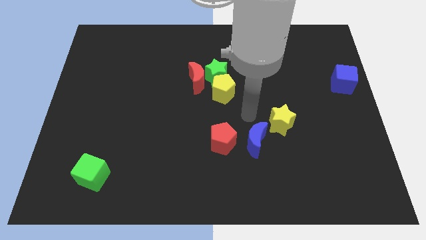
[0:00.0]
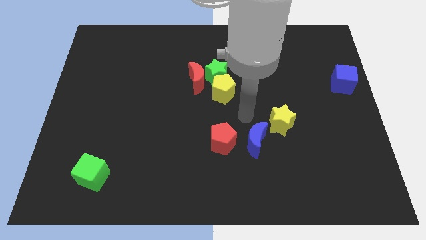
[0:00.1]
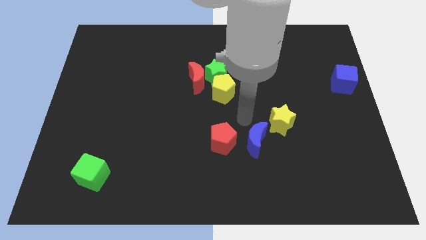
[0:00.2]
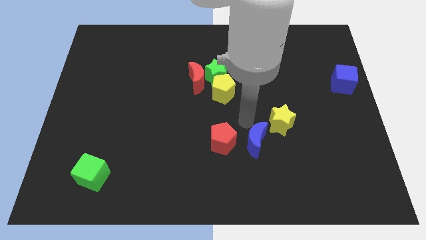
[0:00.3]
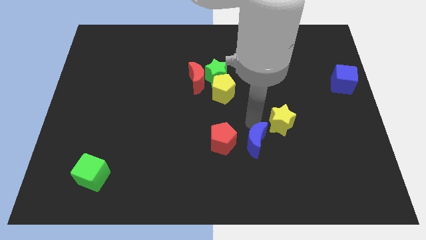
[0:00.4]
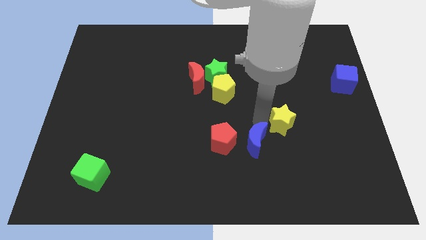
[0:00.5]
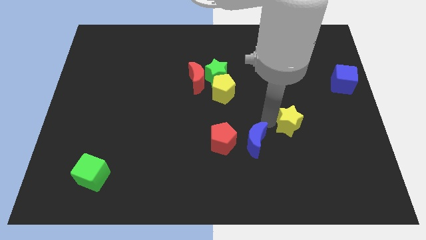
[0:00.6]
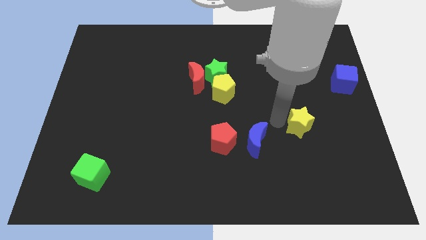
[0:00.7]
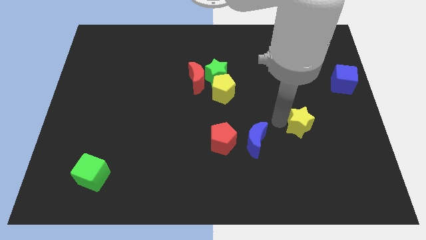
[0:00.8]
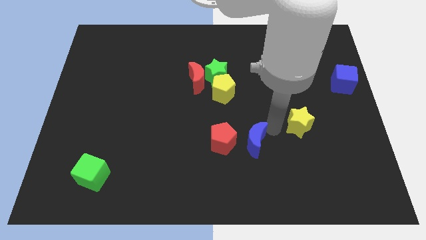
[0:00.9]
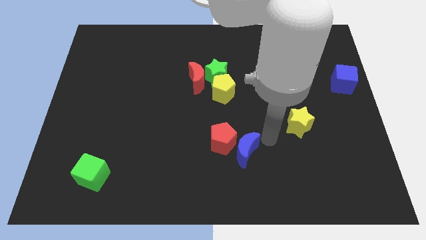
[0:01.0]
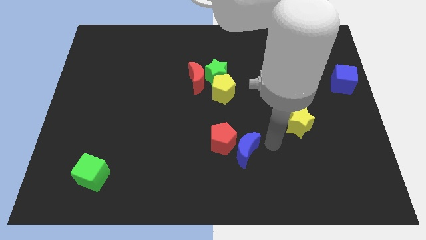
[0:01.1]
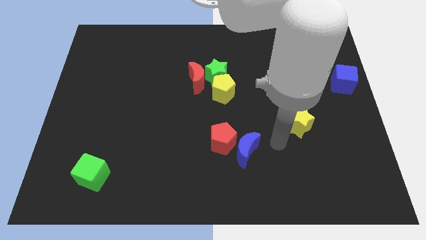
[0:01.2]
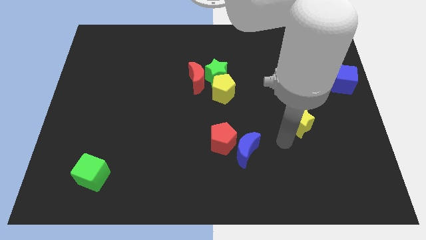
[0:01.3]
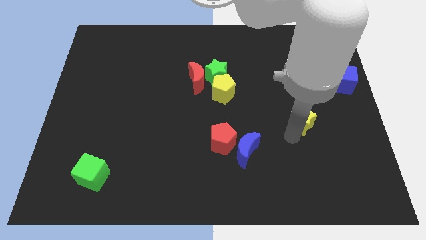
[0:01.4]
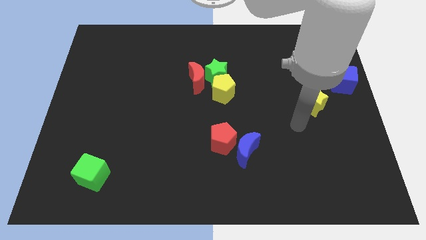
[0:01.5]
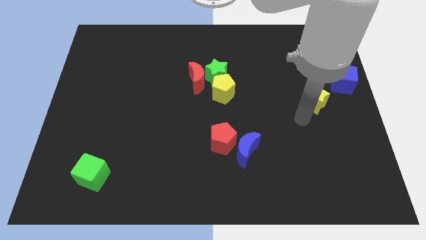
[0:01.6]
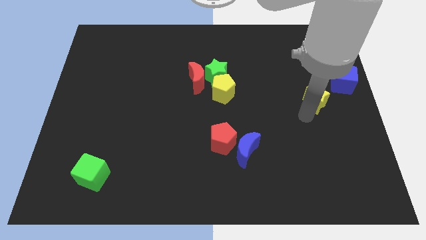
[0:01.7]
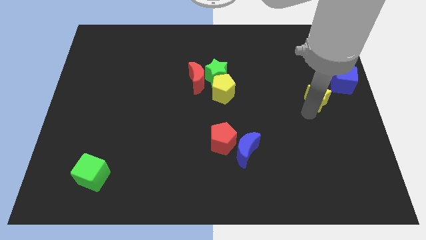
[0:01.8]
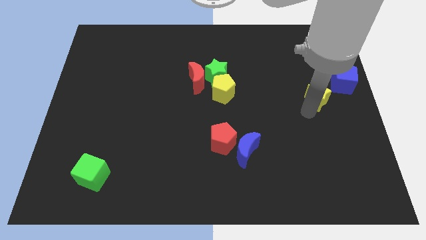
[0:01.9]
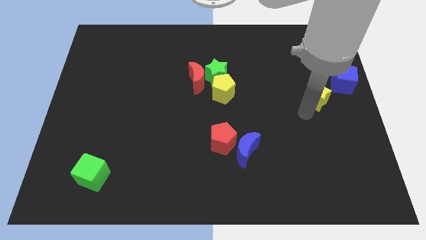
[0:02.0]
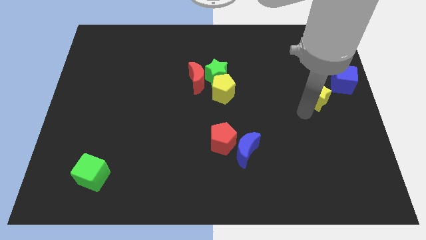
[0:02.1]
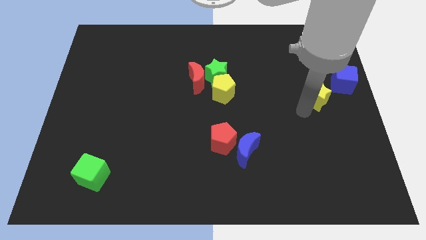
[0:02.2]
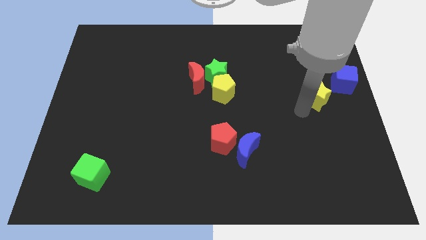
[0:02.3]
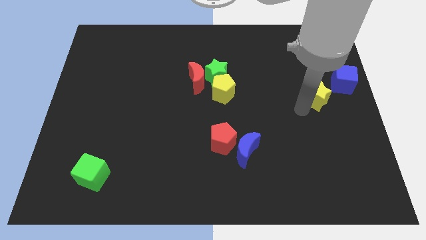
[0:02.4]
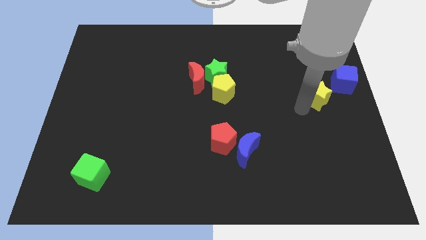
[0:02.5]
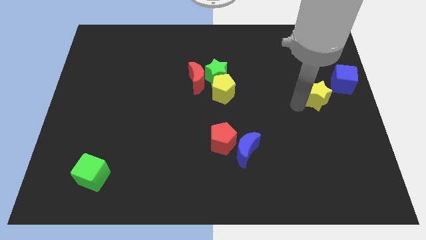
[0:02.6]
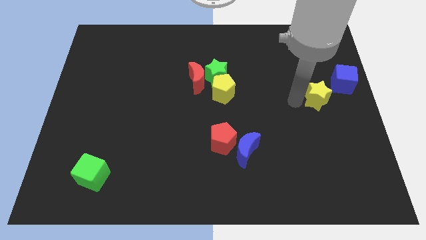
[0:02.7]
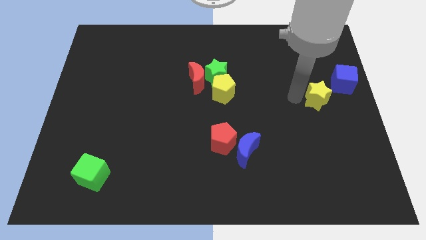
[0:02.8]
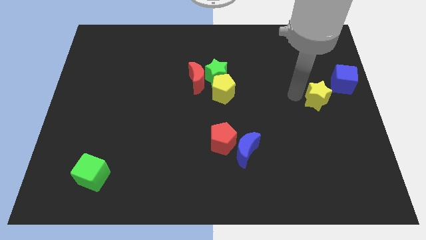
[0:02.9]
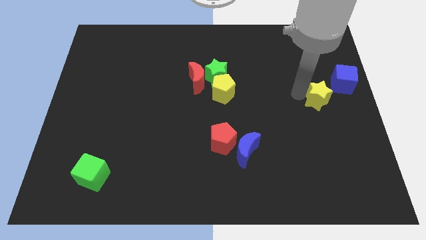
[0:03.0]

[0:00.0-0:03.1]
push the yellow star to the bottom left of the blue cube

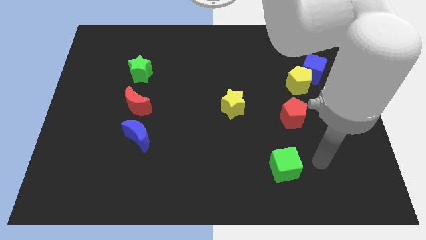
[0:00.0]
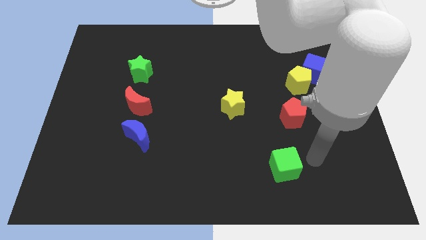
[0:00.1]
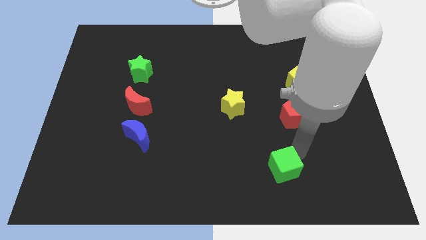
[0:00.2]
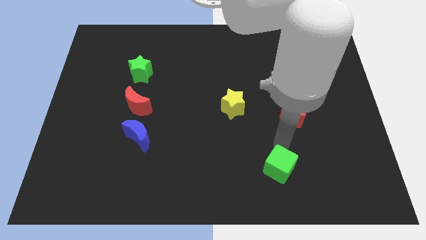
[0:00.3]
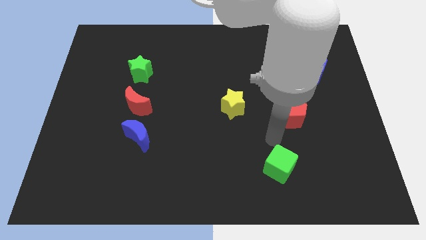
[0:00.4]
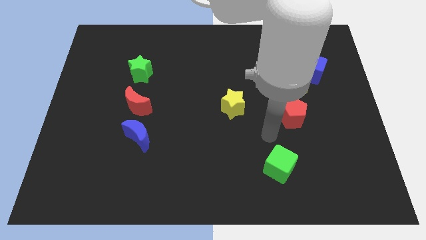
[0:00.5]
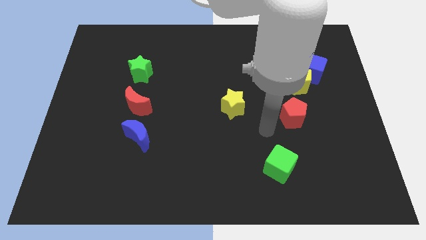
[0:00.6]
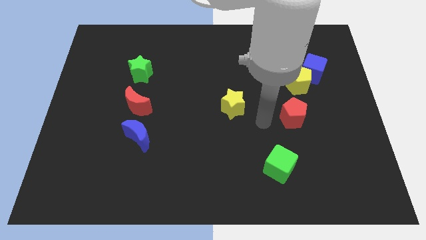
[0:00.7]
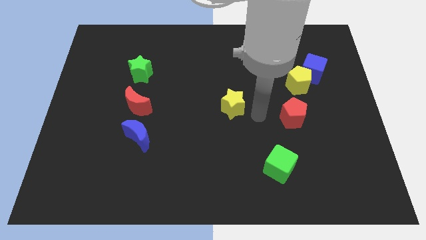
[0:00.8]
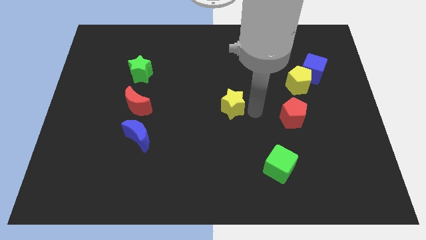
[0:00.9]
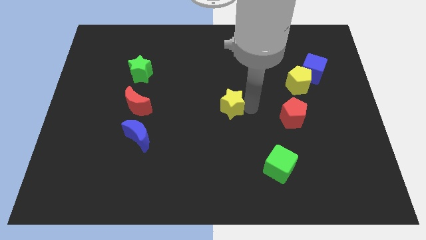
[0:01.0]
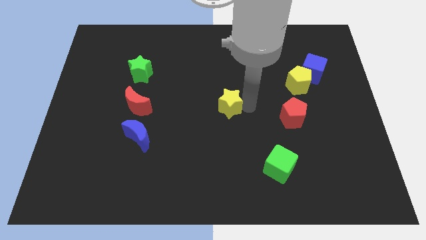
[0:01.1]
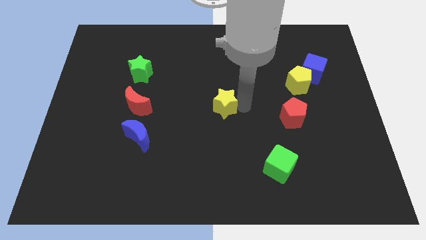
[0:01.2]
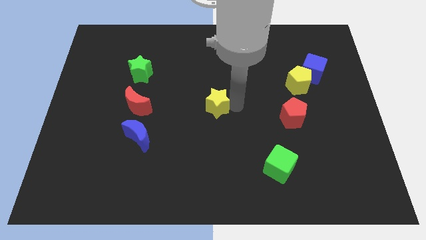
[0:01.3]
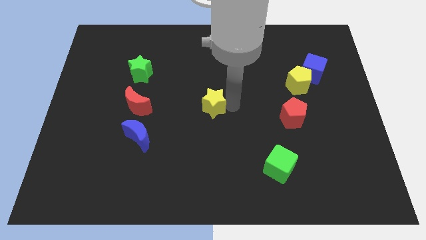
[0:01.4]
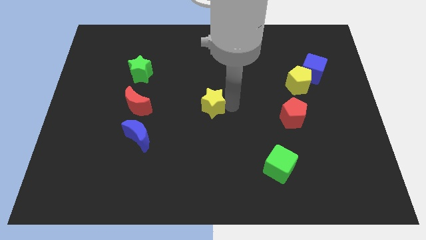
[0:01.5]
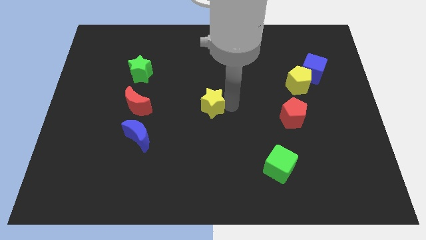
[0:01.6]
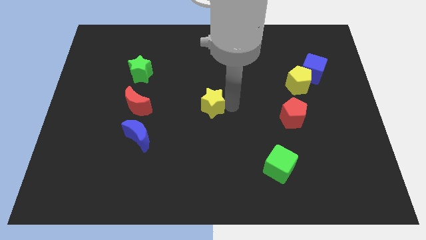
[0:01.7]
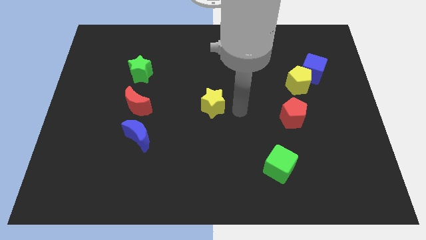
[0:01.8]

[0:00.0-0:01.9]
slightly push yellow star at the center of the board

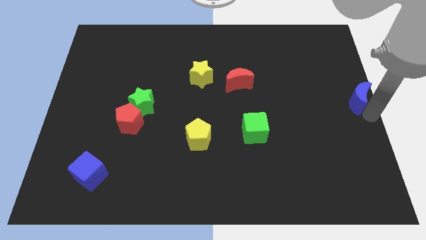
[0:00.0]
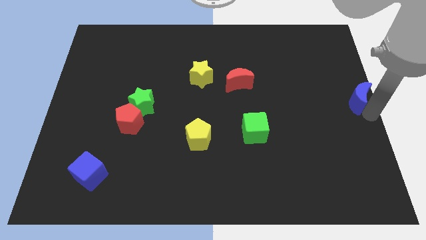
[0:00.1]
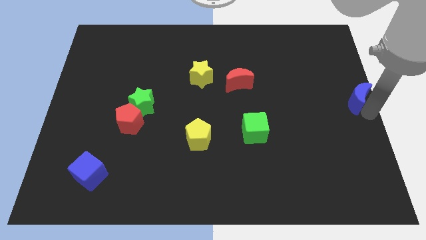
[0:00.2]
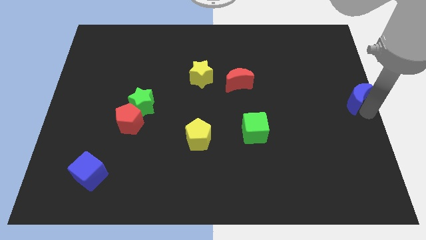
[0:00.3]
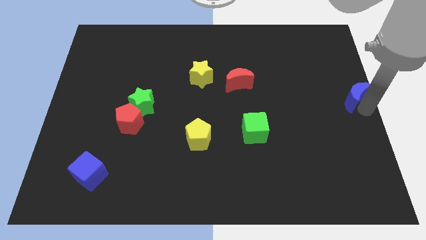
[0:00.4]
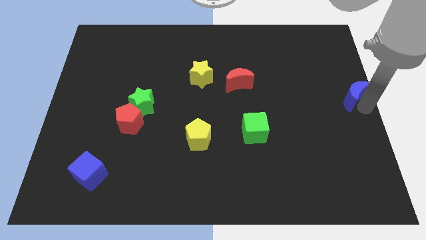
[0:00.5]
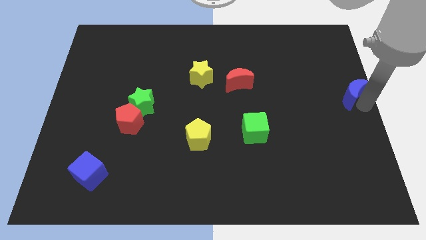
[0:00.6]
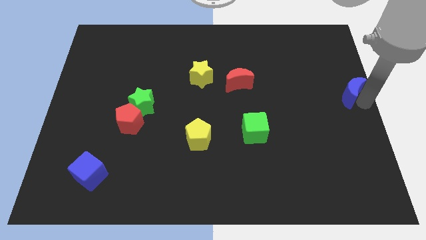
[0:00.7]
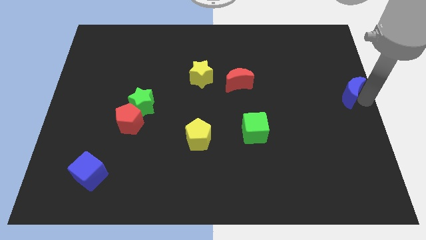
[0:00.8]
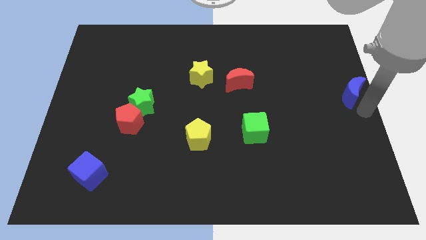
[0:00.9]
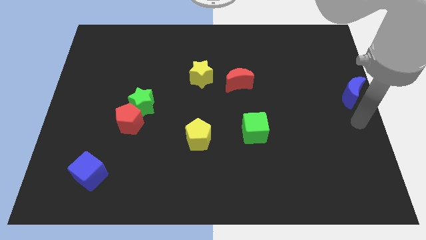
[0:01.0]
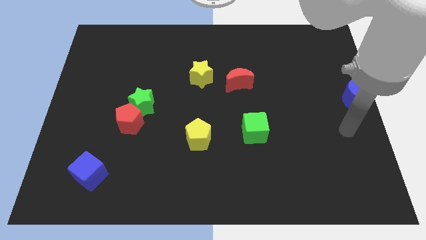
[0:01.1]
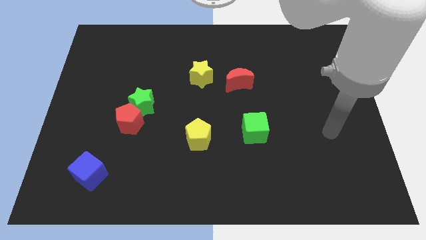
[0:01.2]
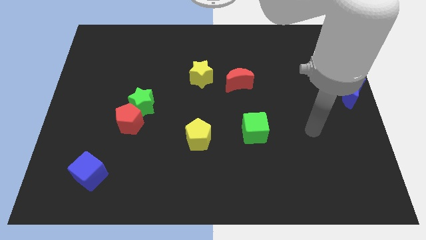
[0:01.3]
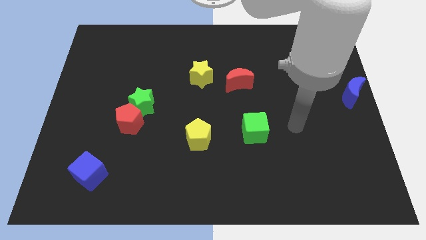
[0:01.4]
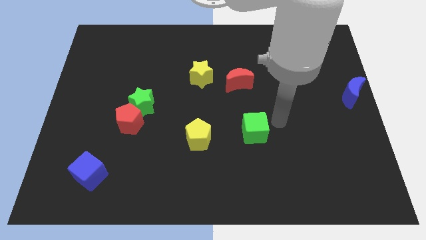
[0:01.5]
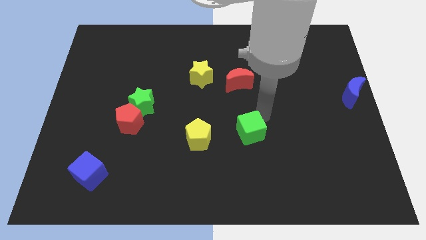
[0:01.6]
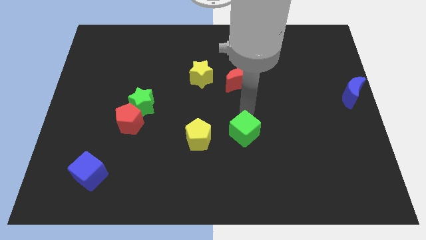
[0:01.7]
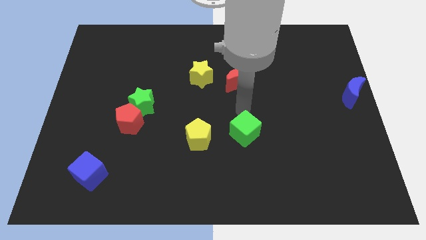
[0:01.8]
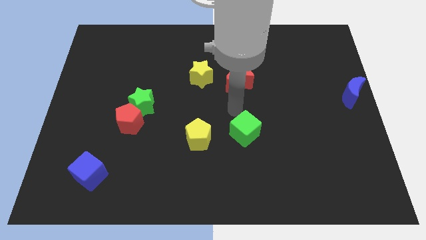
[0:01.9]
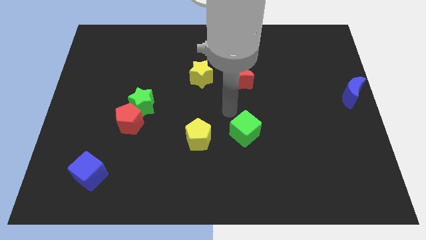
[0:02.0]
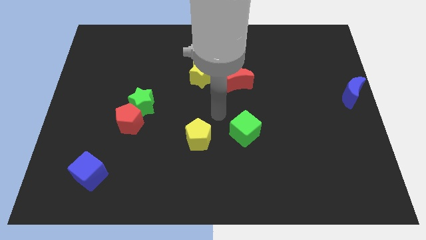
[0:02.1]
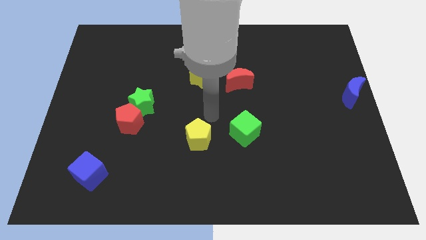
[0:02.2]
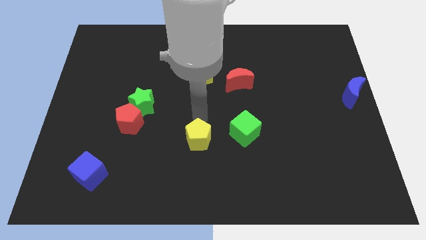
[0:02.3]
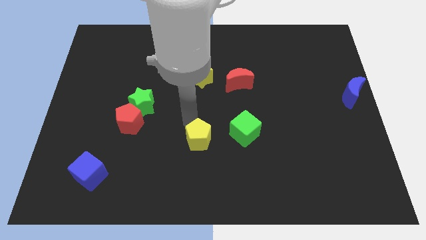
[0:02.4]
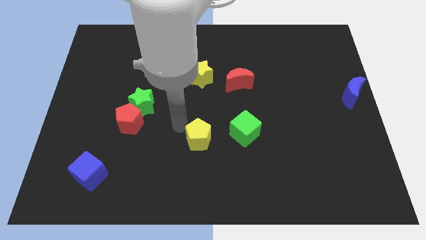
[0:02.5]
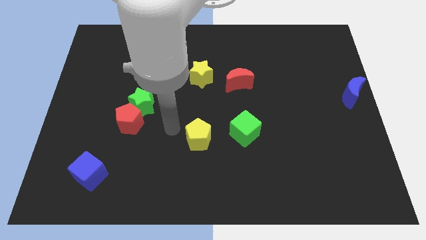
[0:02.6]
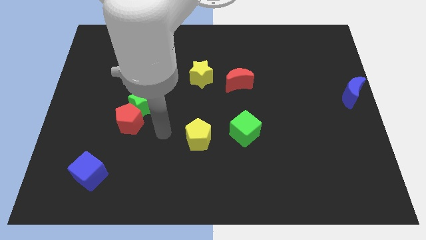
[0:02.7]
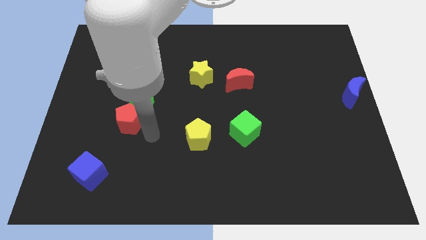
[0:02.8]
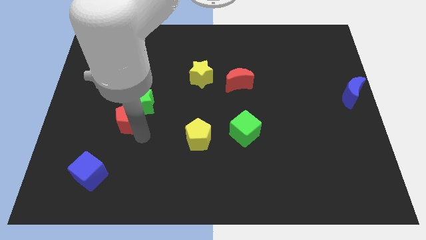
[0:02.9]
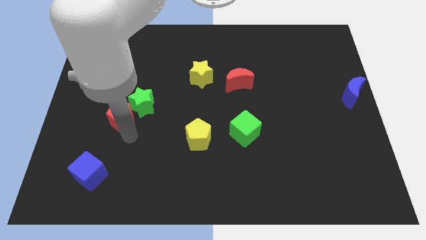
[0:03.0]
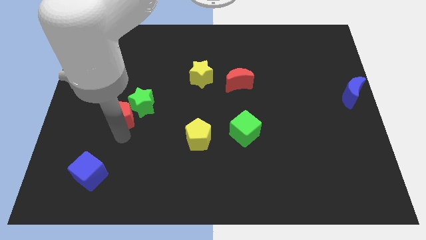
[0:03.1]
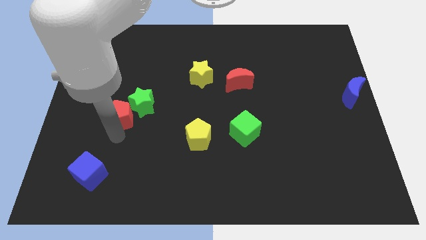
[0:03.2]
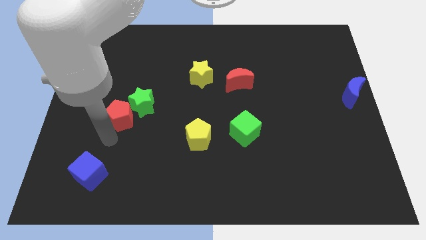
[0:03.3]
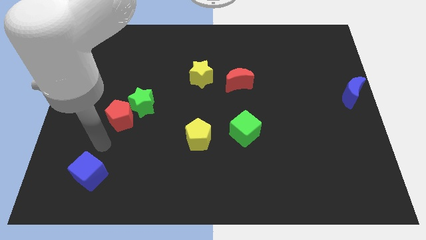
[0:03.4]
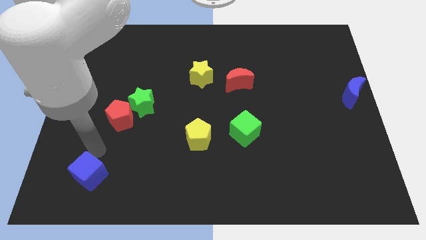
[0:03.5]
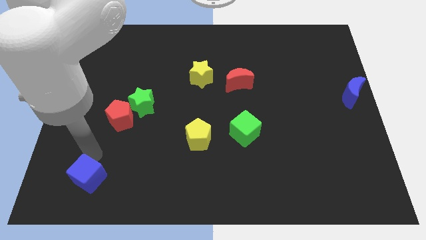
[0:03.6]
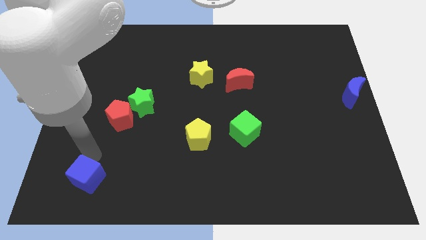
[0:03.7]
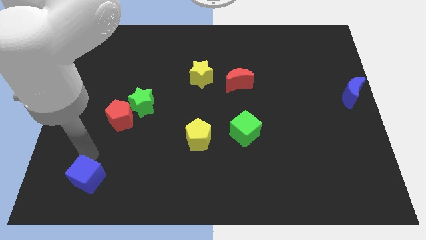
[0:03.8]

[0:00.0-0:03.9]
point your arm above blue cube

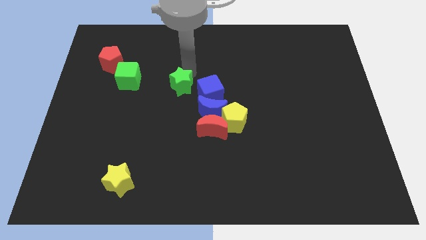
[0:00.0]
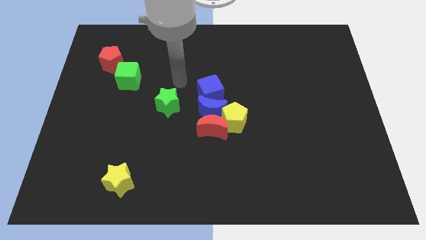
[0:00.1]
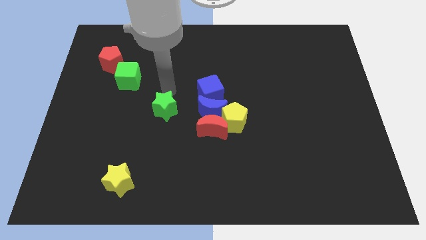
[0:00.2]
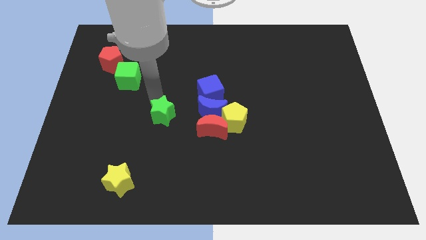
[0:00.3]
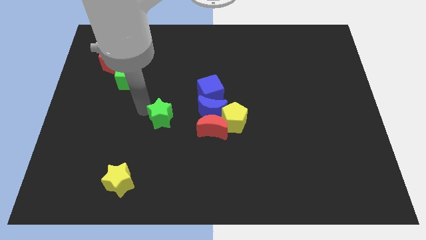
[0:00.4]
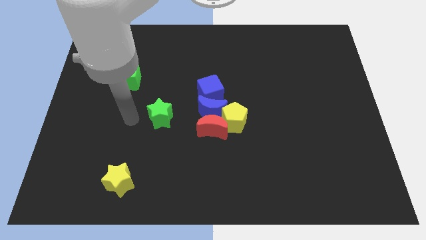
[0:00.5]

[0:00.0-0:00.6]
move the green star to the bottom of the board
